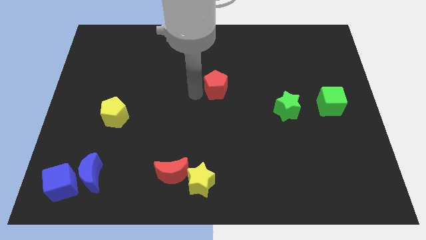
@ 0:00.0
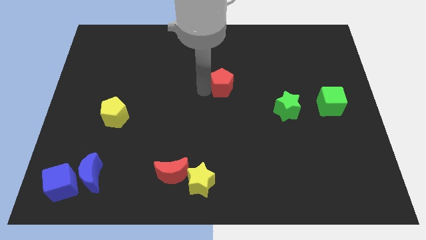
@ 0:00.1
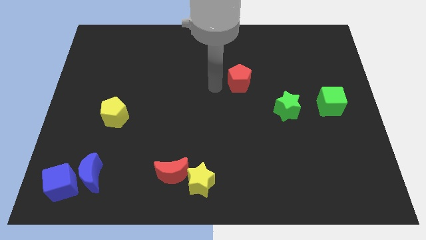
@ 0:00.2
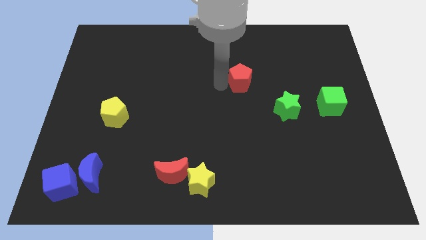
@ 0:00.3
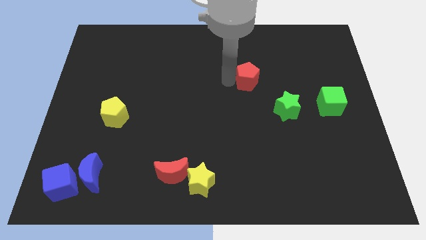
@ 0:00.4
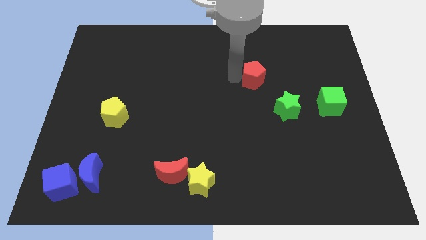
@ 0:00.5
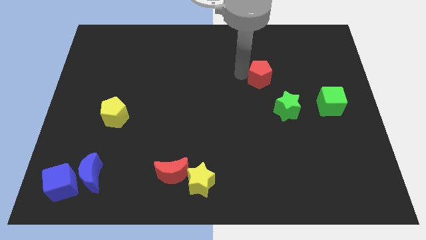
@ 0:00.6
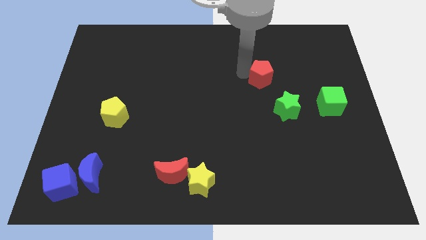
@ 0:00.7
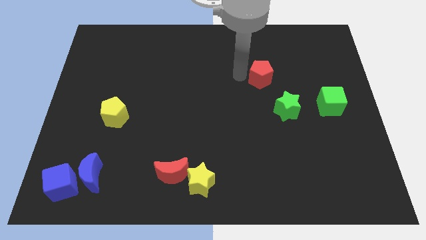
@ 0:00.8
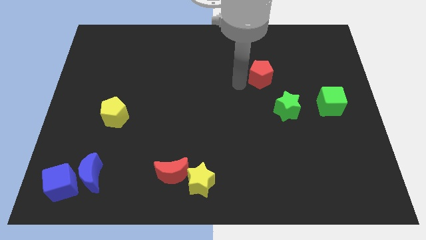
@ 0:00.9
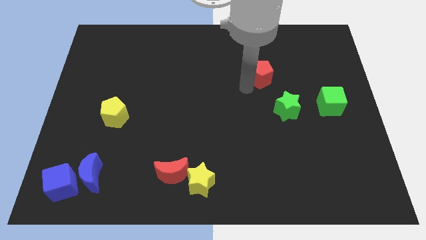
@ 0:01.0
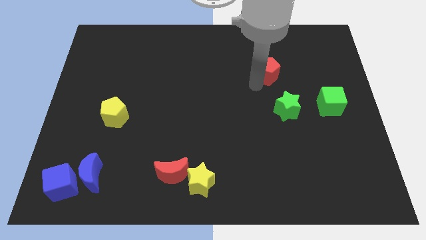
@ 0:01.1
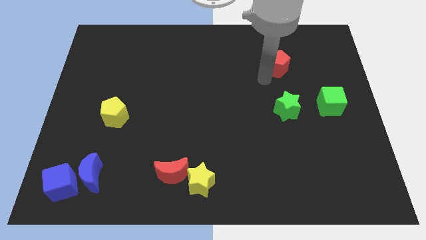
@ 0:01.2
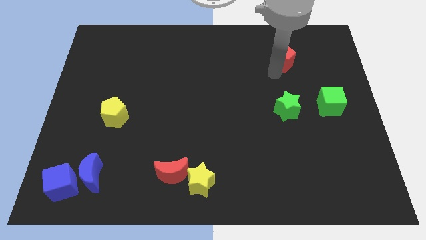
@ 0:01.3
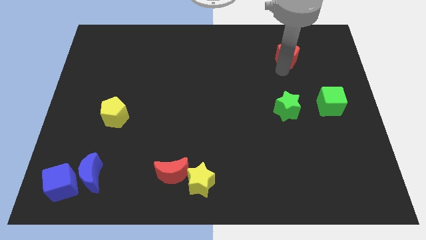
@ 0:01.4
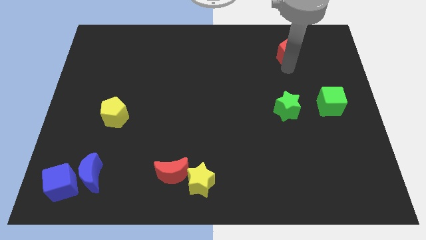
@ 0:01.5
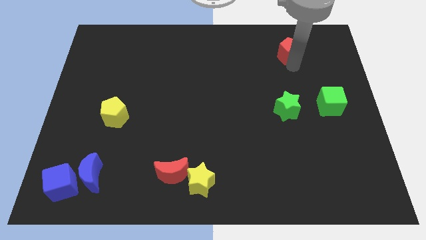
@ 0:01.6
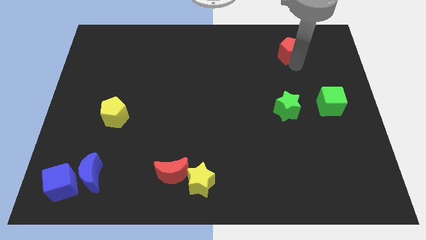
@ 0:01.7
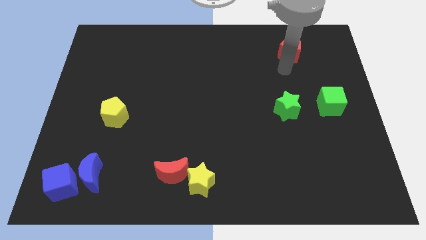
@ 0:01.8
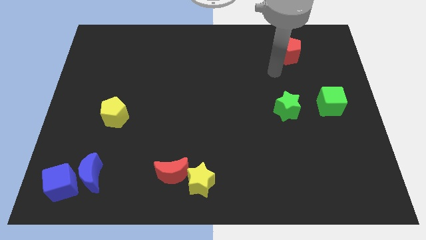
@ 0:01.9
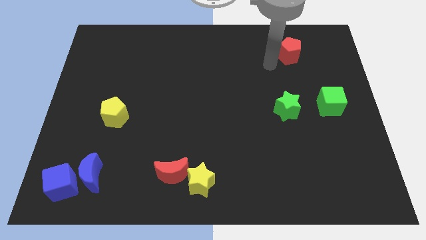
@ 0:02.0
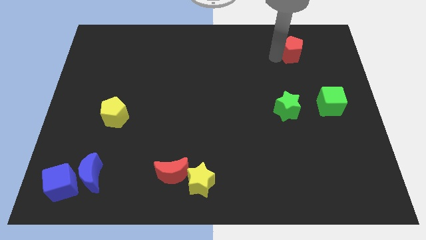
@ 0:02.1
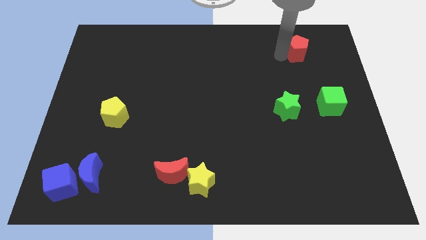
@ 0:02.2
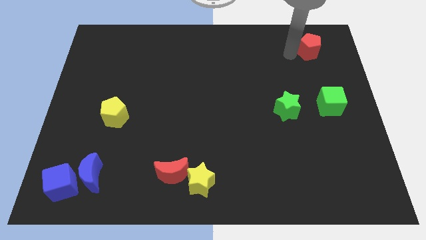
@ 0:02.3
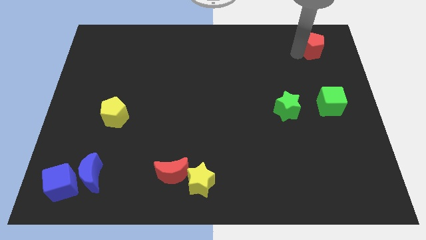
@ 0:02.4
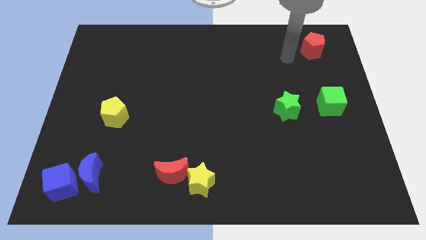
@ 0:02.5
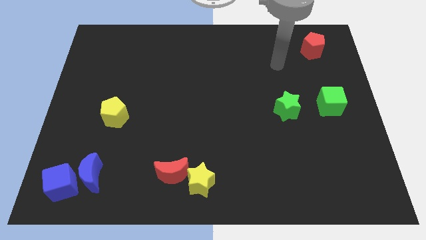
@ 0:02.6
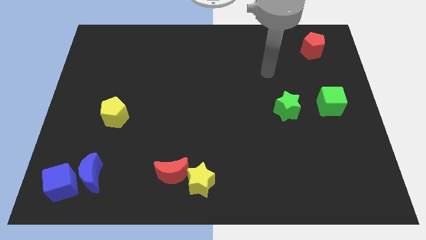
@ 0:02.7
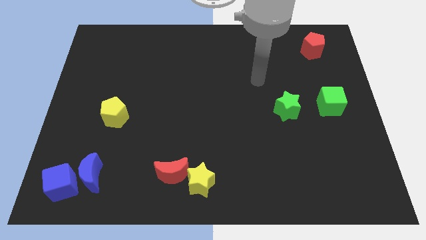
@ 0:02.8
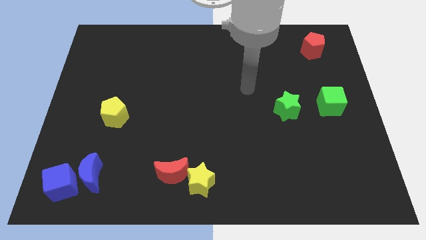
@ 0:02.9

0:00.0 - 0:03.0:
move the red pentagon towards the top right side of the board

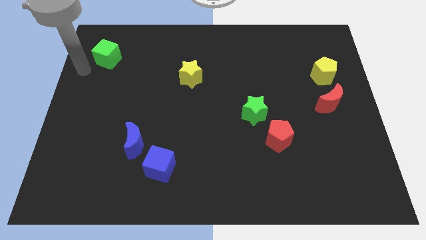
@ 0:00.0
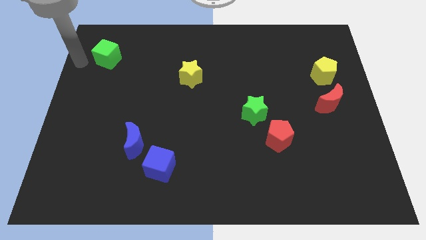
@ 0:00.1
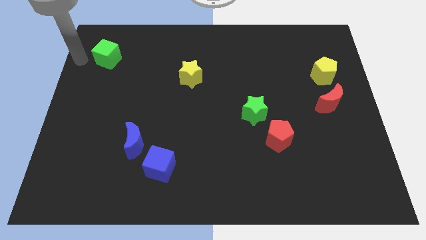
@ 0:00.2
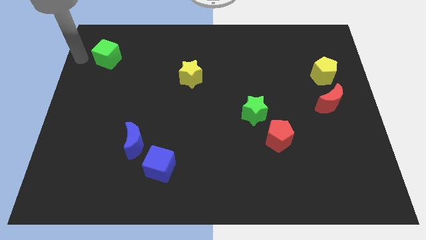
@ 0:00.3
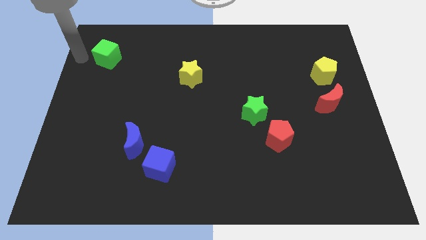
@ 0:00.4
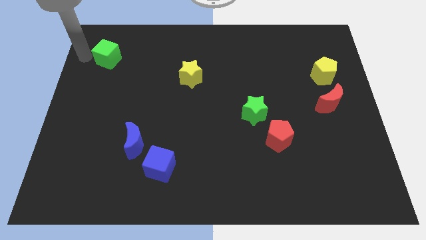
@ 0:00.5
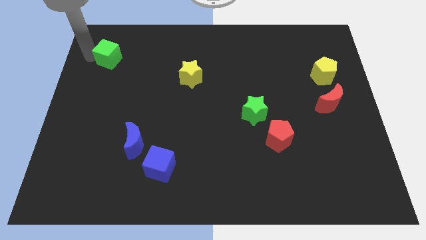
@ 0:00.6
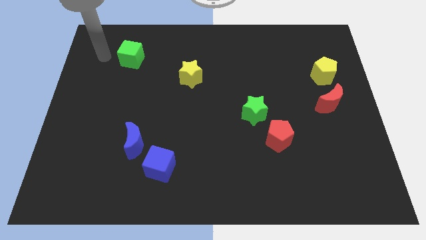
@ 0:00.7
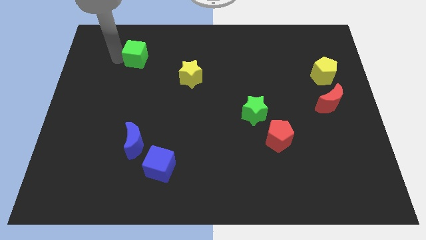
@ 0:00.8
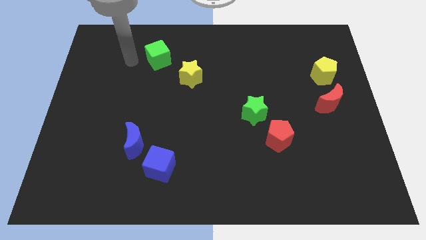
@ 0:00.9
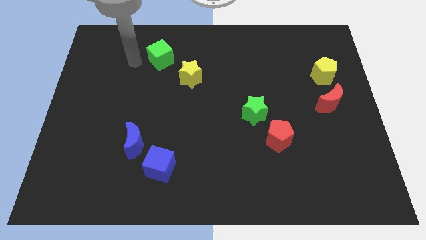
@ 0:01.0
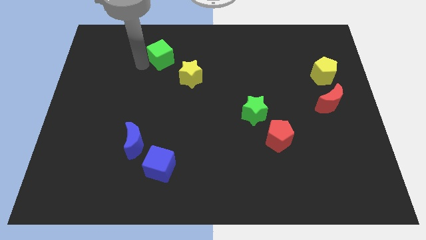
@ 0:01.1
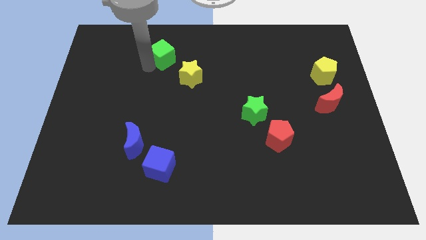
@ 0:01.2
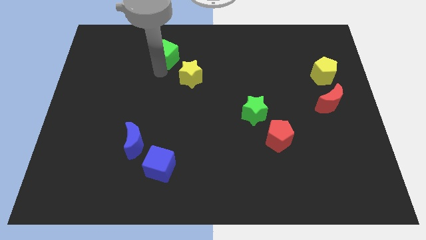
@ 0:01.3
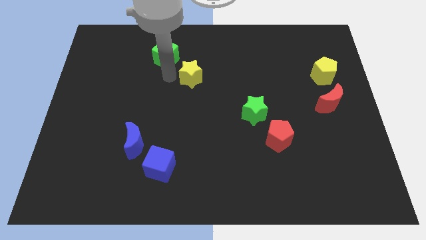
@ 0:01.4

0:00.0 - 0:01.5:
push green cube close to the yellow star

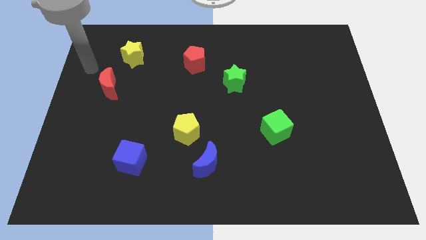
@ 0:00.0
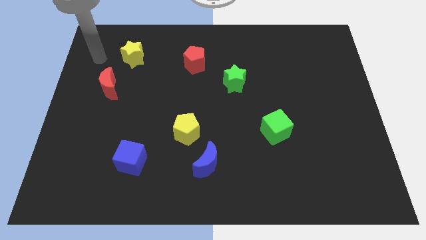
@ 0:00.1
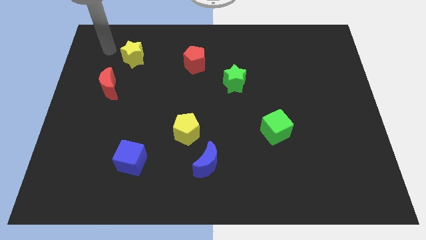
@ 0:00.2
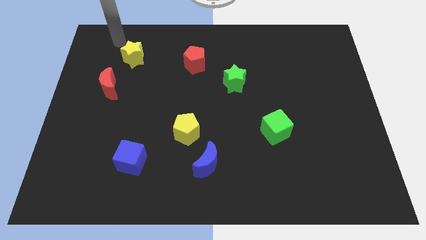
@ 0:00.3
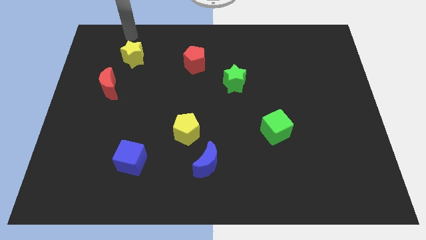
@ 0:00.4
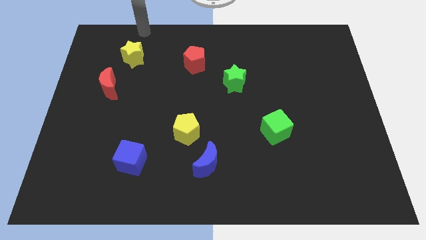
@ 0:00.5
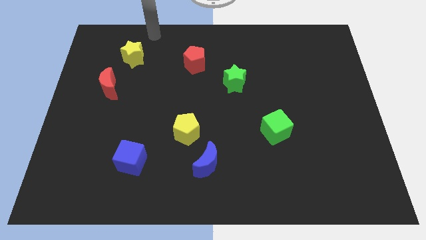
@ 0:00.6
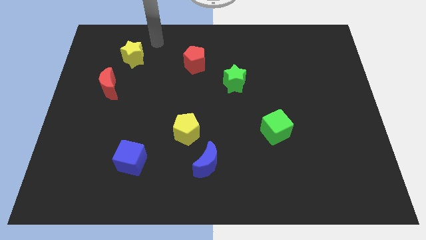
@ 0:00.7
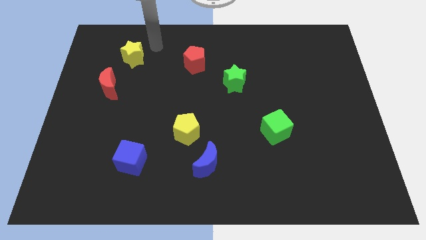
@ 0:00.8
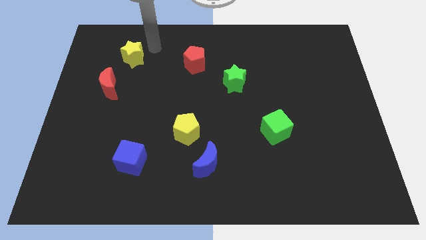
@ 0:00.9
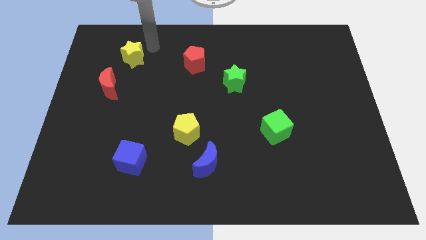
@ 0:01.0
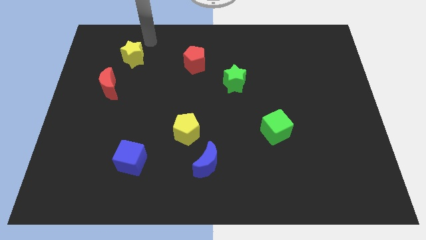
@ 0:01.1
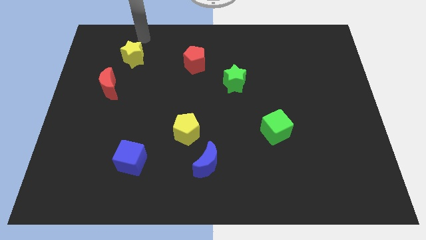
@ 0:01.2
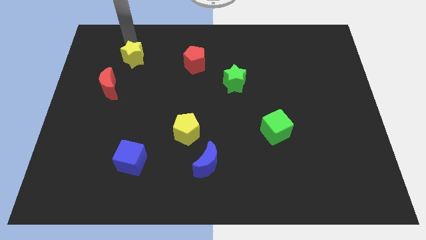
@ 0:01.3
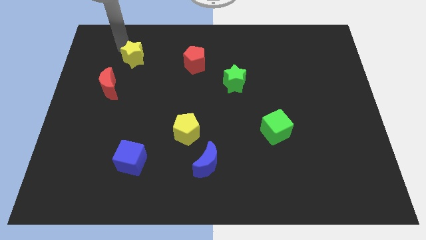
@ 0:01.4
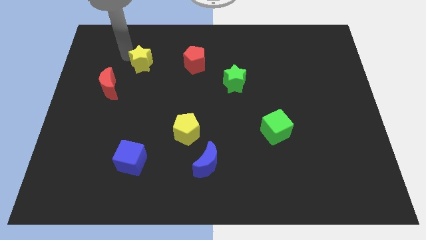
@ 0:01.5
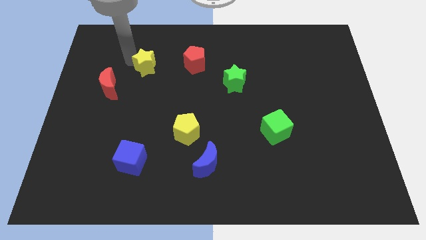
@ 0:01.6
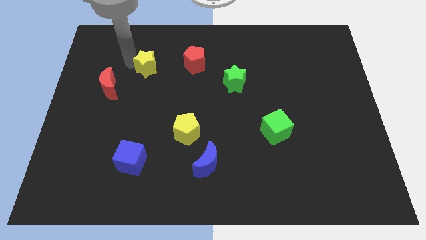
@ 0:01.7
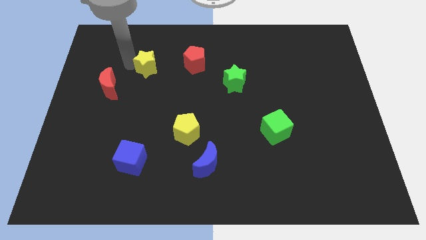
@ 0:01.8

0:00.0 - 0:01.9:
put yellow star to the left of the red pentagon

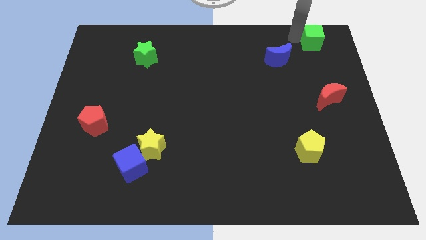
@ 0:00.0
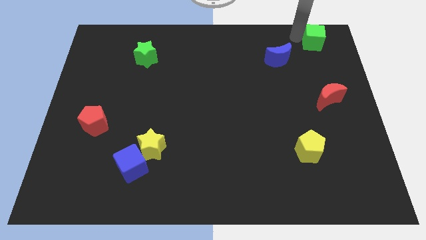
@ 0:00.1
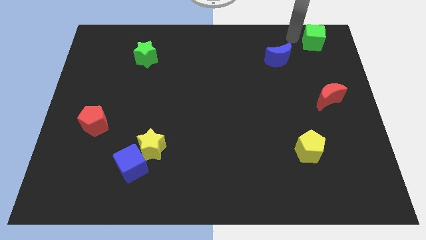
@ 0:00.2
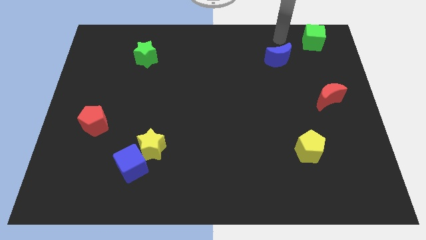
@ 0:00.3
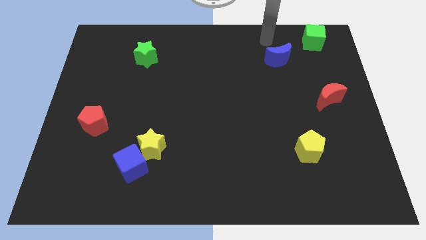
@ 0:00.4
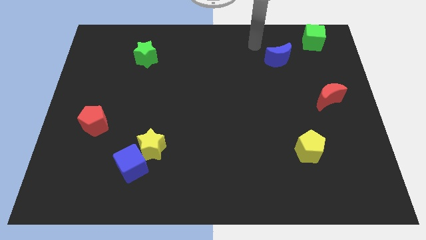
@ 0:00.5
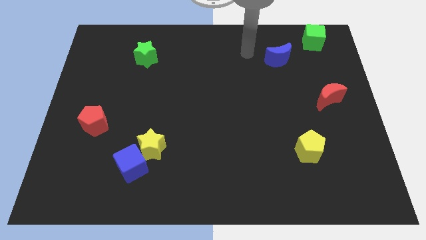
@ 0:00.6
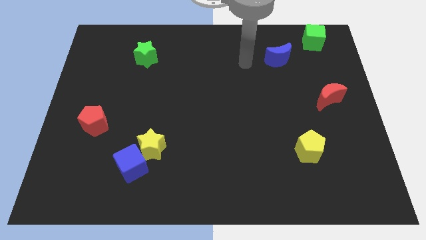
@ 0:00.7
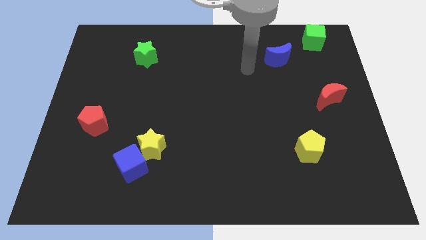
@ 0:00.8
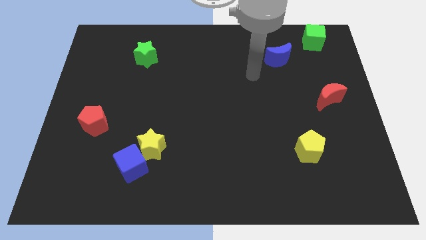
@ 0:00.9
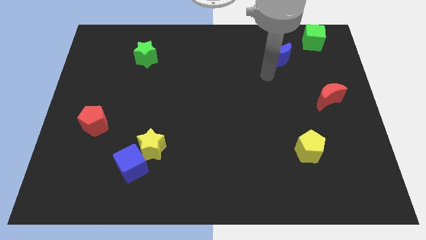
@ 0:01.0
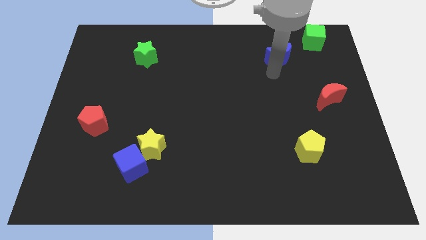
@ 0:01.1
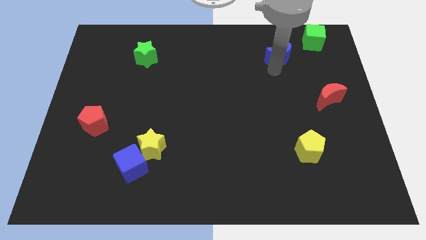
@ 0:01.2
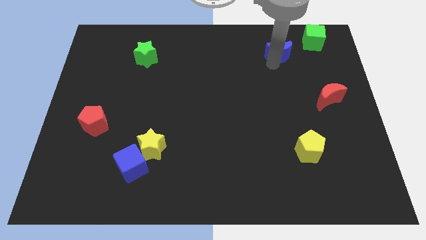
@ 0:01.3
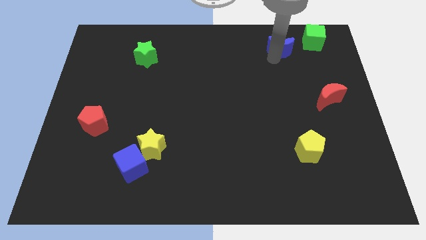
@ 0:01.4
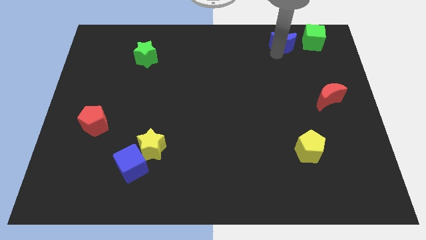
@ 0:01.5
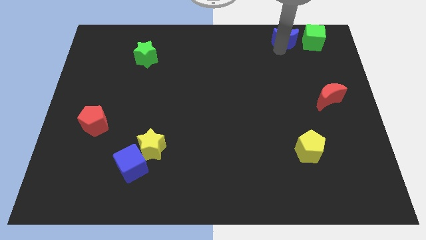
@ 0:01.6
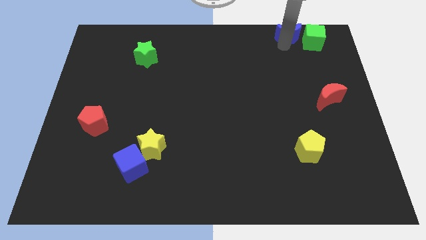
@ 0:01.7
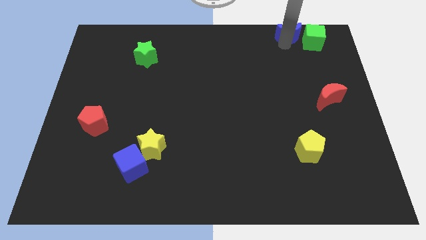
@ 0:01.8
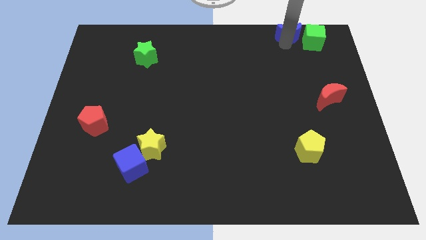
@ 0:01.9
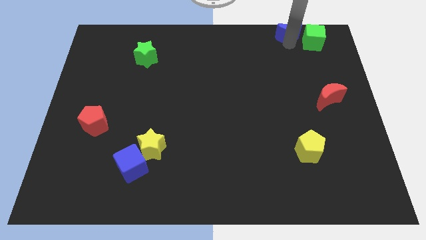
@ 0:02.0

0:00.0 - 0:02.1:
push blue crescent left to the green cube

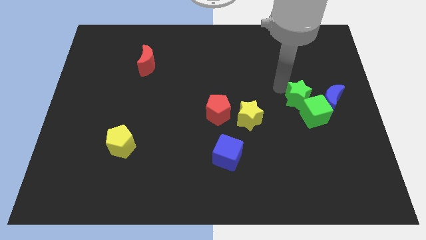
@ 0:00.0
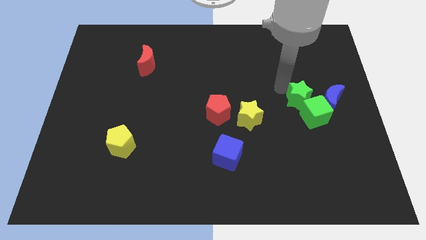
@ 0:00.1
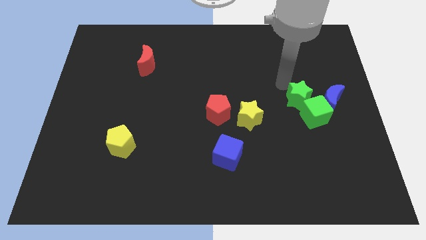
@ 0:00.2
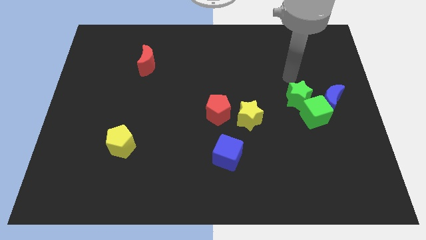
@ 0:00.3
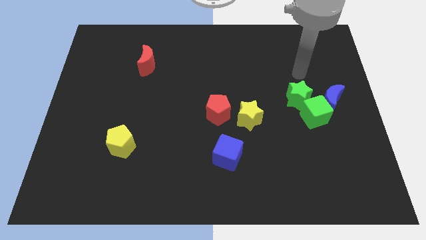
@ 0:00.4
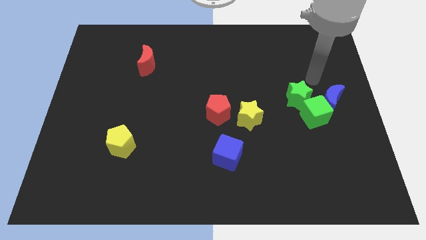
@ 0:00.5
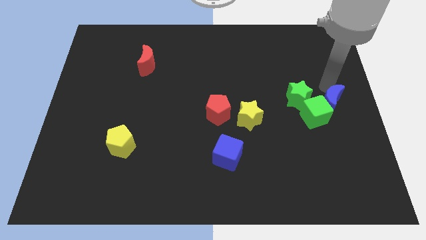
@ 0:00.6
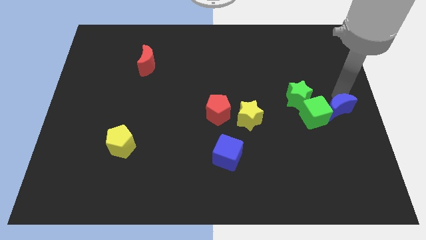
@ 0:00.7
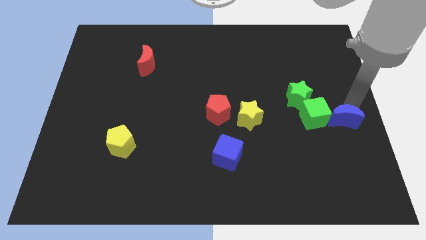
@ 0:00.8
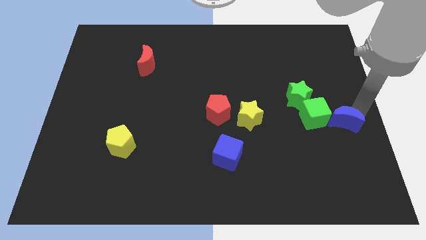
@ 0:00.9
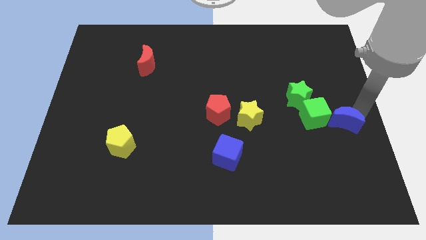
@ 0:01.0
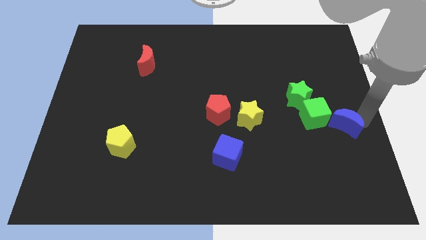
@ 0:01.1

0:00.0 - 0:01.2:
push the blue crescent towards down
